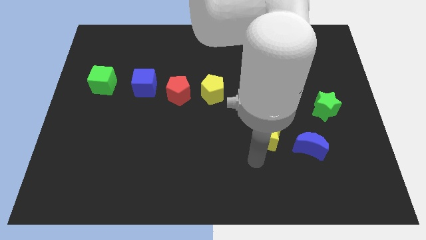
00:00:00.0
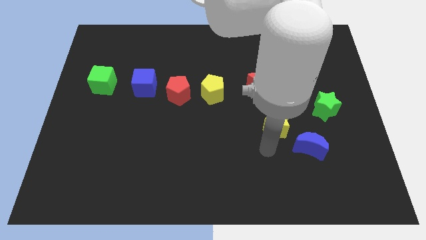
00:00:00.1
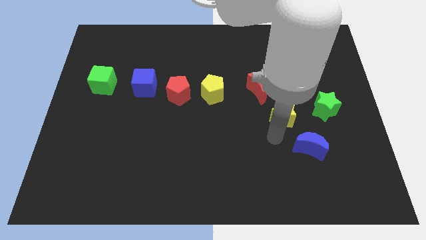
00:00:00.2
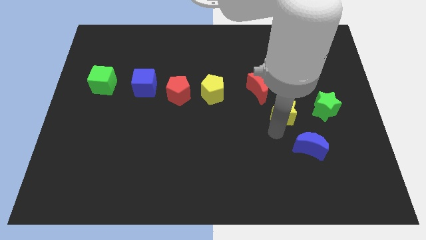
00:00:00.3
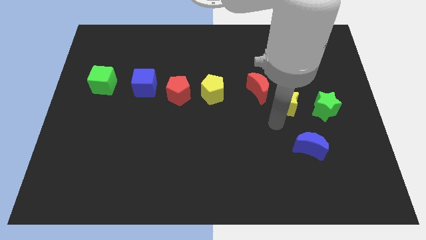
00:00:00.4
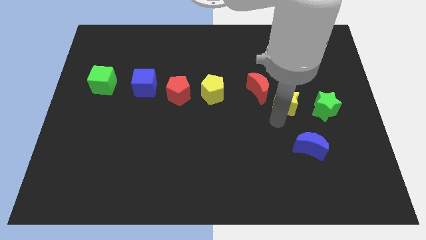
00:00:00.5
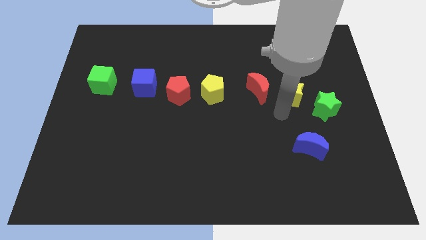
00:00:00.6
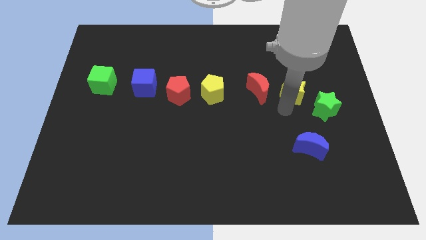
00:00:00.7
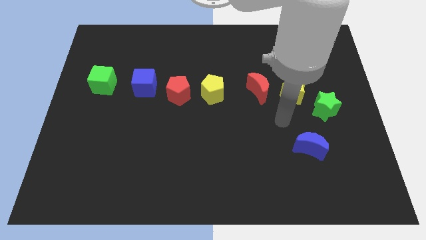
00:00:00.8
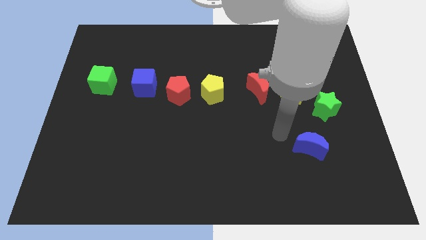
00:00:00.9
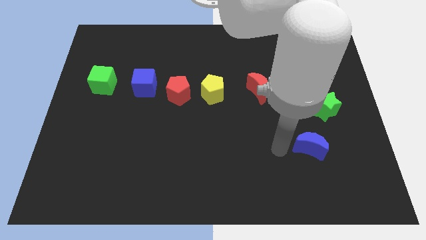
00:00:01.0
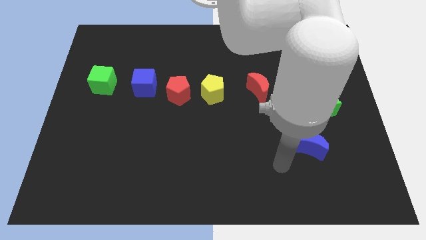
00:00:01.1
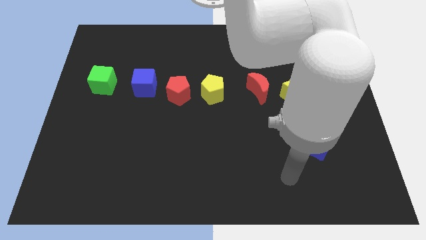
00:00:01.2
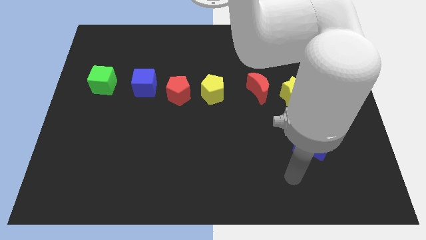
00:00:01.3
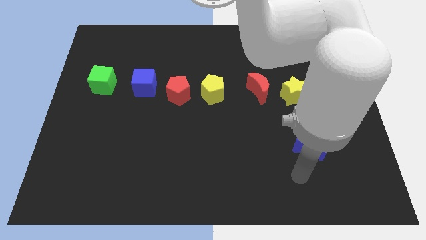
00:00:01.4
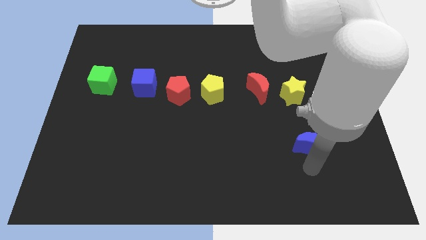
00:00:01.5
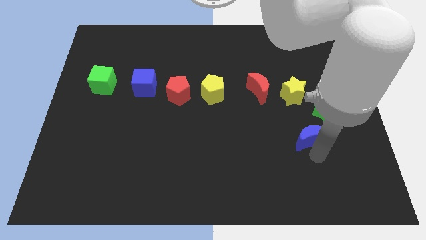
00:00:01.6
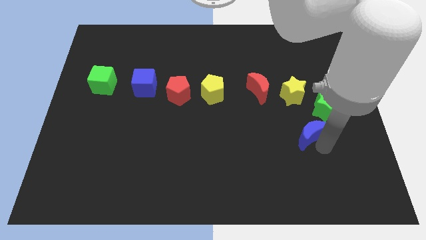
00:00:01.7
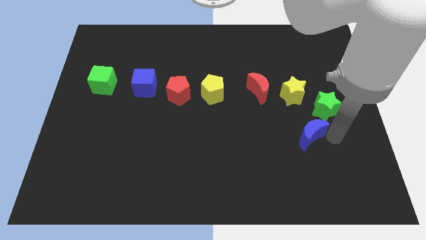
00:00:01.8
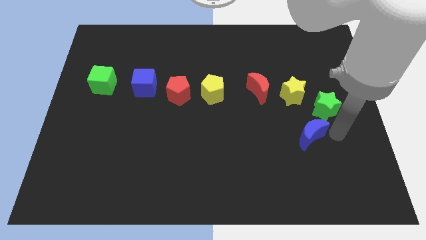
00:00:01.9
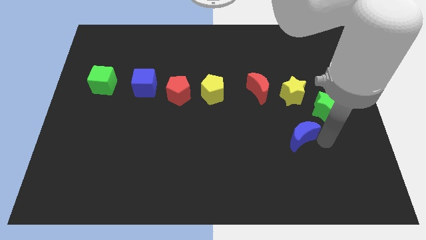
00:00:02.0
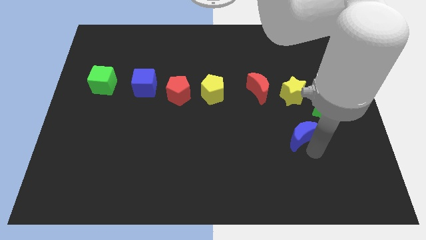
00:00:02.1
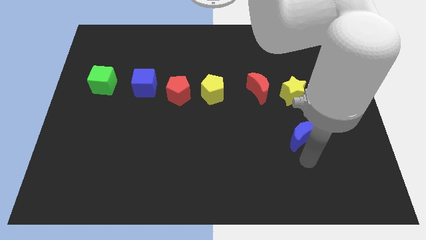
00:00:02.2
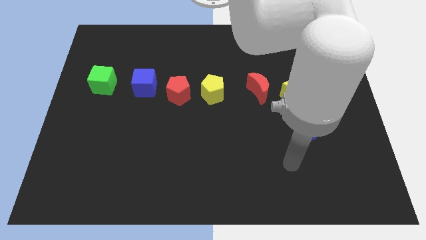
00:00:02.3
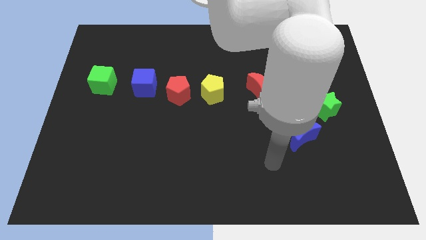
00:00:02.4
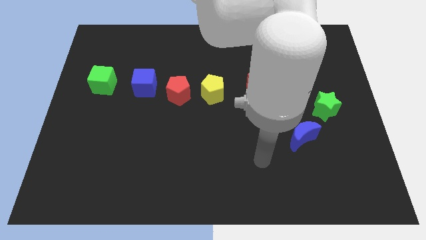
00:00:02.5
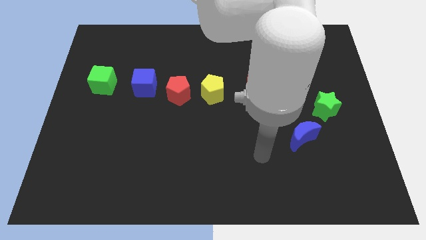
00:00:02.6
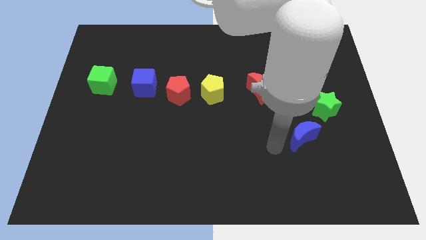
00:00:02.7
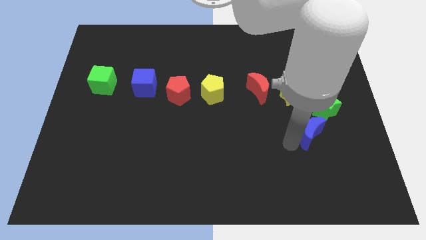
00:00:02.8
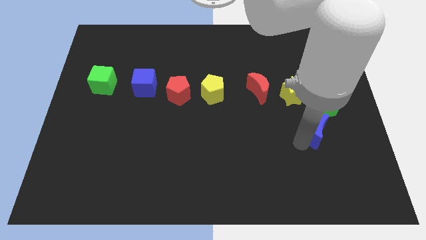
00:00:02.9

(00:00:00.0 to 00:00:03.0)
place the yellow star to the right of red crescent

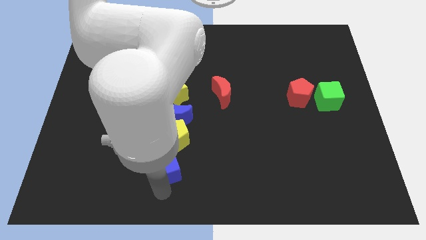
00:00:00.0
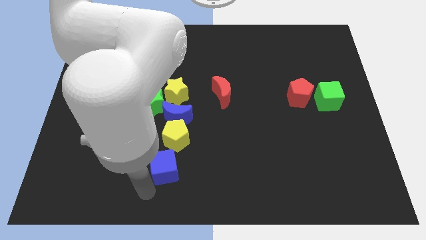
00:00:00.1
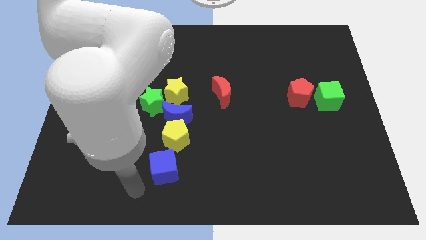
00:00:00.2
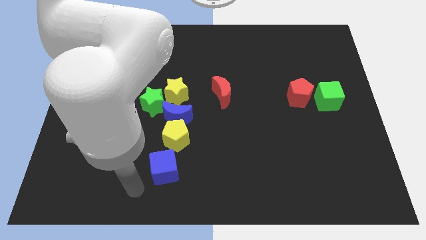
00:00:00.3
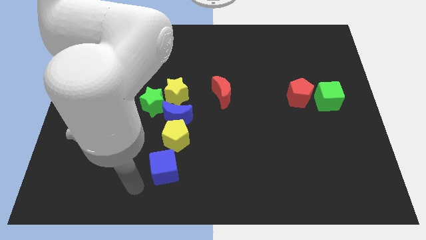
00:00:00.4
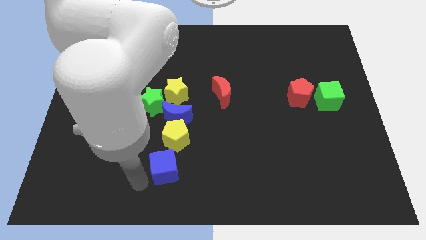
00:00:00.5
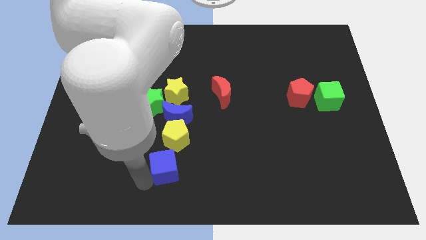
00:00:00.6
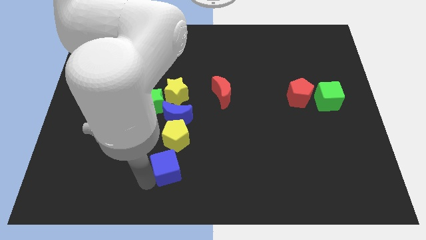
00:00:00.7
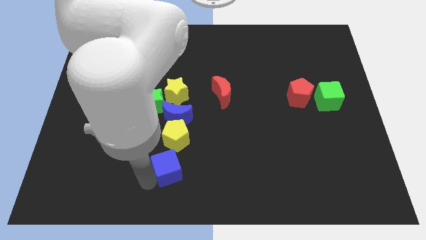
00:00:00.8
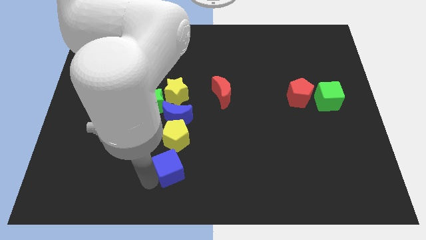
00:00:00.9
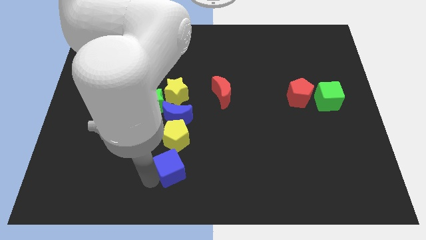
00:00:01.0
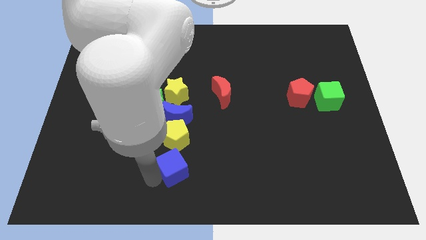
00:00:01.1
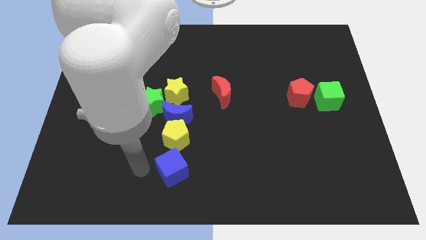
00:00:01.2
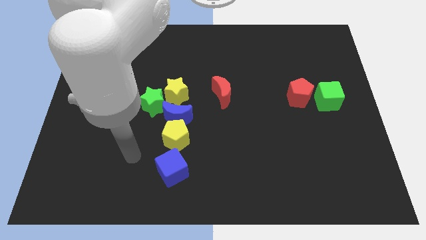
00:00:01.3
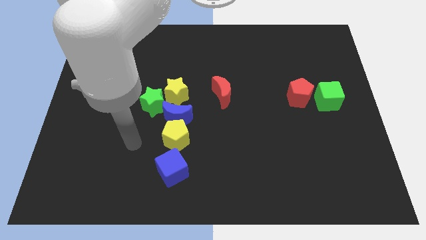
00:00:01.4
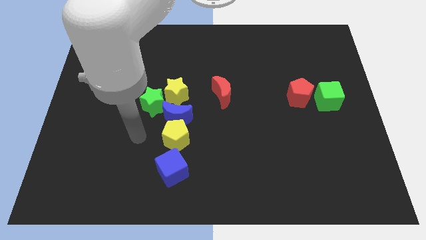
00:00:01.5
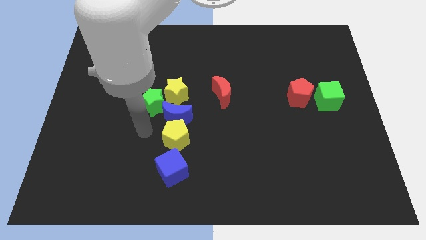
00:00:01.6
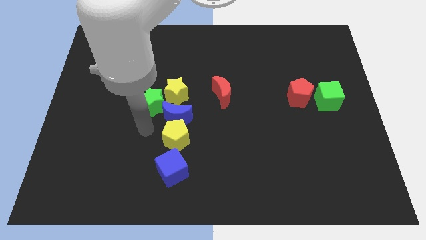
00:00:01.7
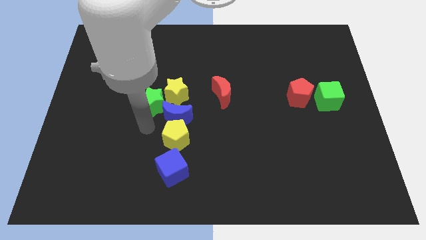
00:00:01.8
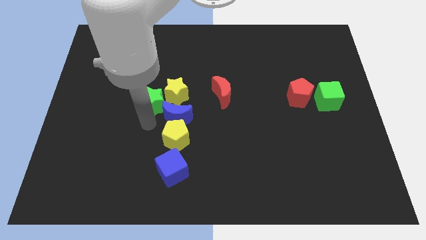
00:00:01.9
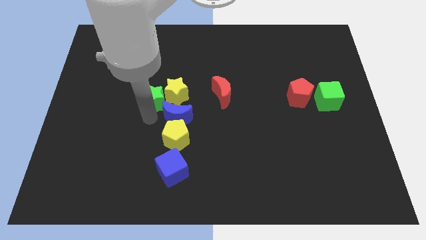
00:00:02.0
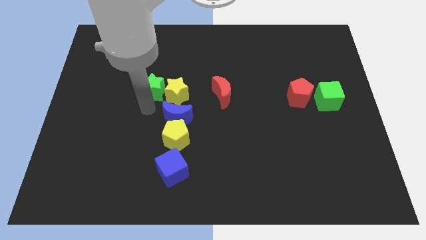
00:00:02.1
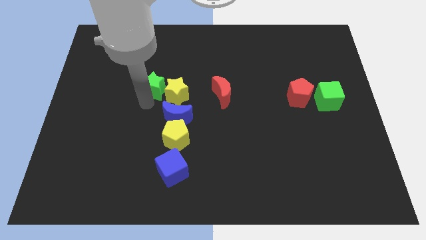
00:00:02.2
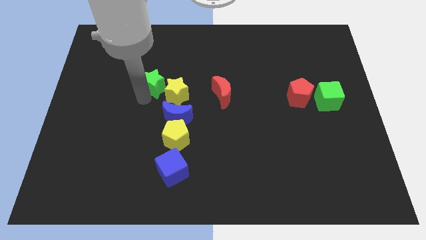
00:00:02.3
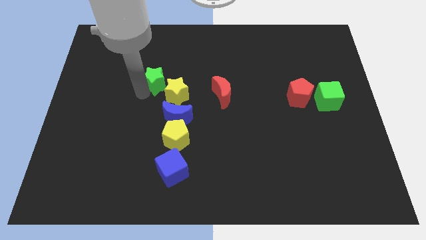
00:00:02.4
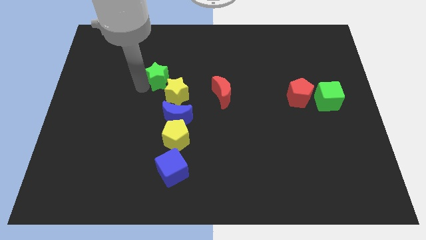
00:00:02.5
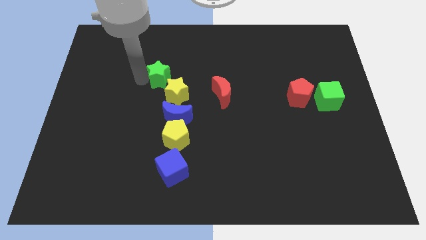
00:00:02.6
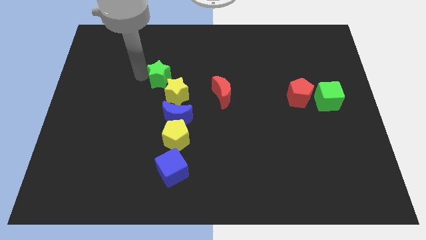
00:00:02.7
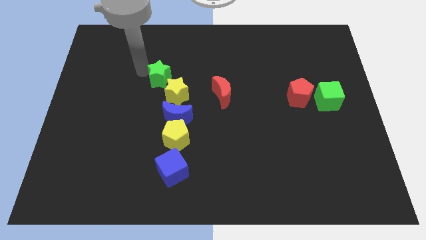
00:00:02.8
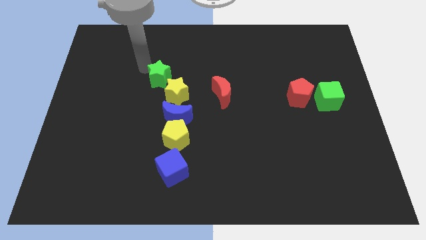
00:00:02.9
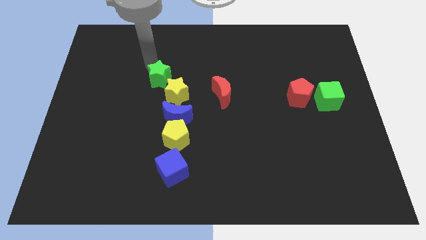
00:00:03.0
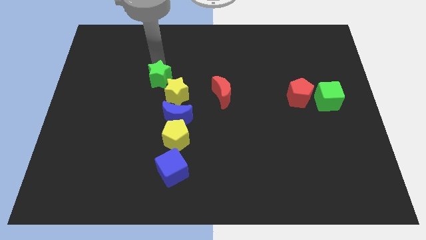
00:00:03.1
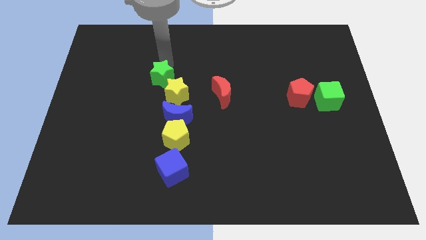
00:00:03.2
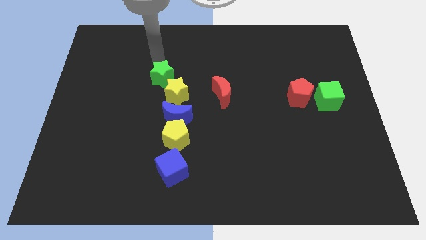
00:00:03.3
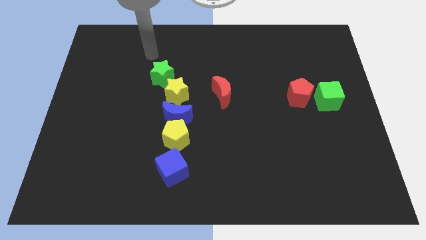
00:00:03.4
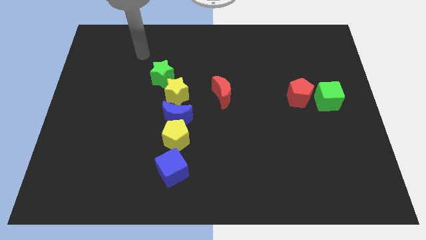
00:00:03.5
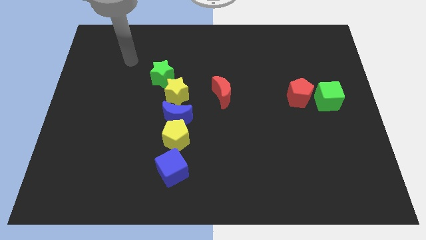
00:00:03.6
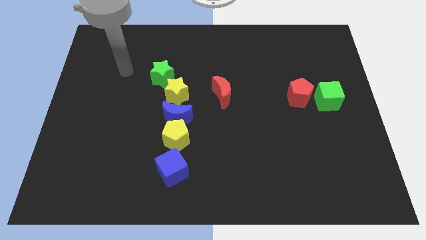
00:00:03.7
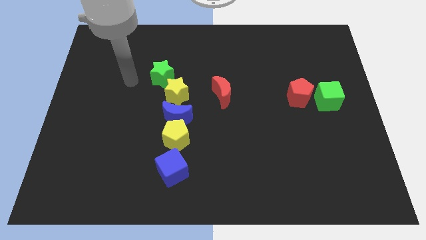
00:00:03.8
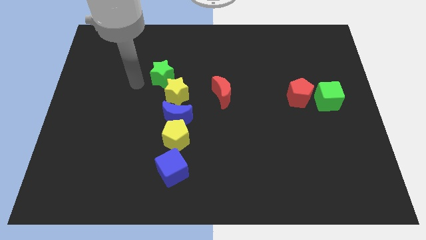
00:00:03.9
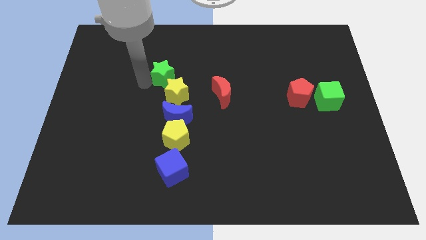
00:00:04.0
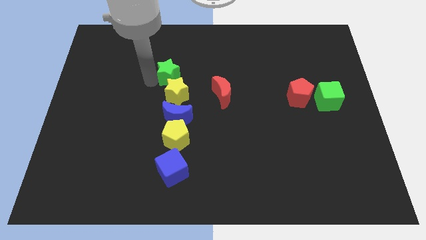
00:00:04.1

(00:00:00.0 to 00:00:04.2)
push the green star towards the top side of the board

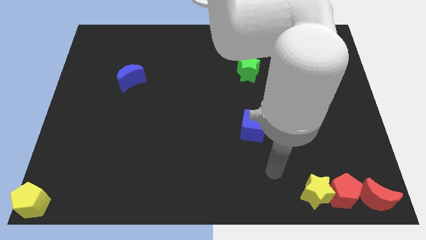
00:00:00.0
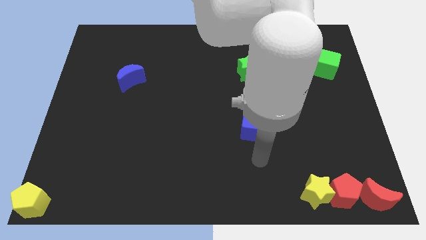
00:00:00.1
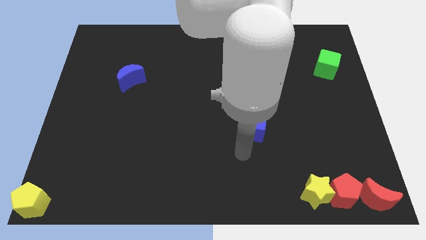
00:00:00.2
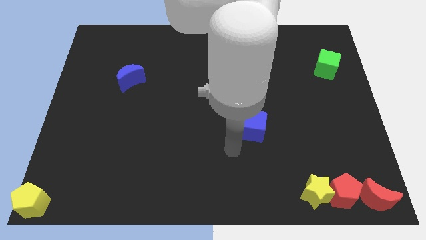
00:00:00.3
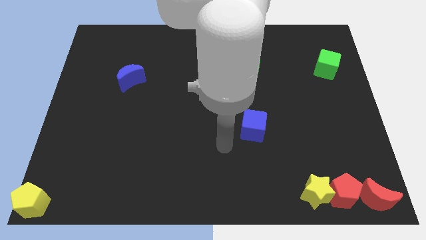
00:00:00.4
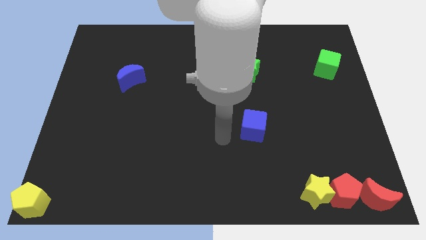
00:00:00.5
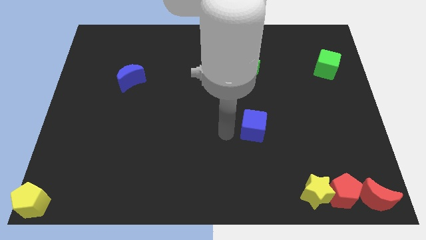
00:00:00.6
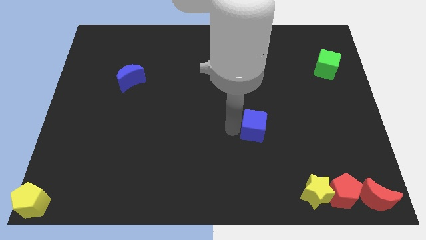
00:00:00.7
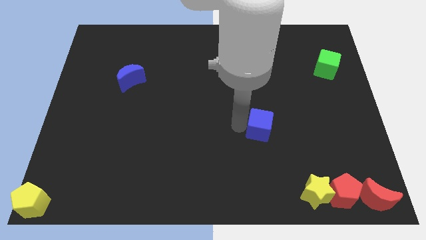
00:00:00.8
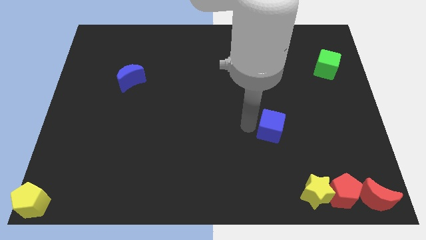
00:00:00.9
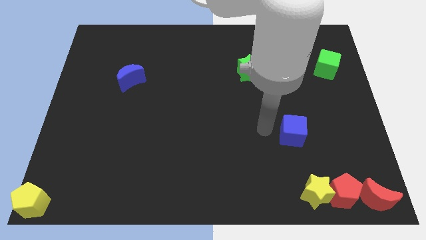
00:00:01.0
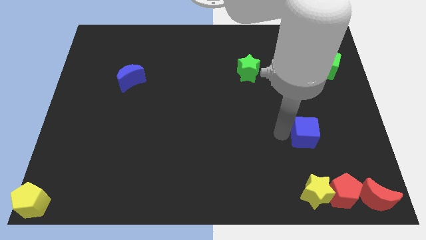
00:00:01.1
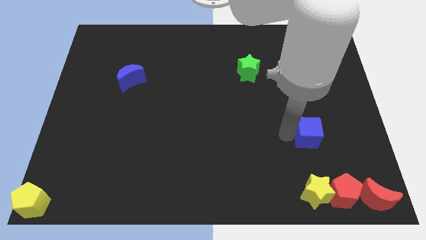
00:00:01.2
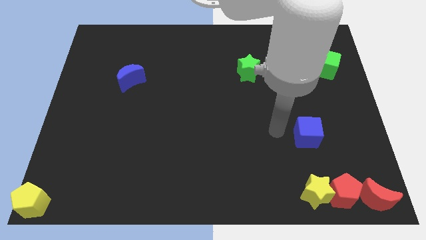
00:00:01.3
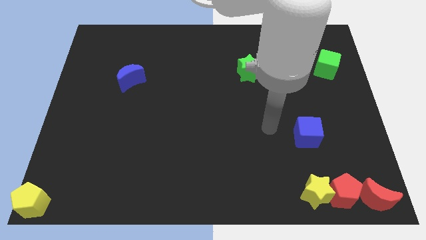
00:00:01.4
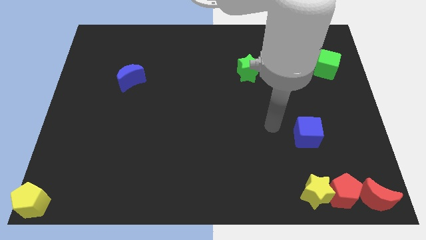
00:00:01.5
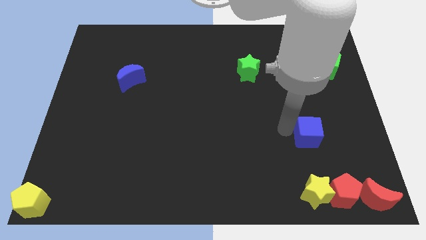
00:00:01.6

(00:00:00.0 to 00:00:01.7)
move the blue cube parallel to the yellow star

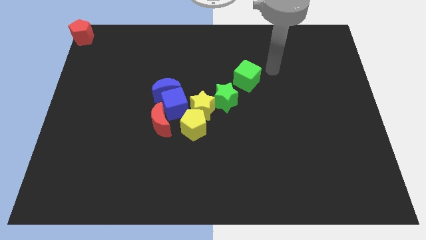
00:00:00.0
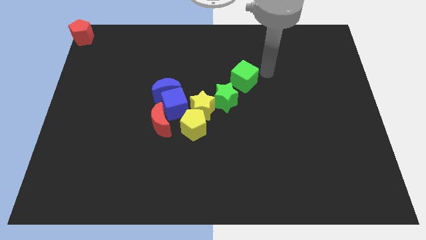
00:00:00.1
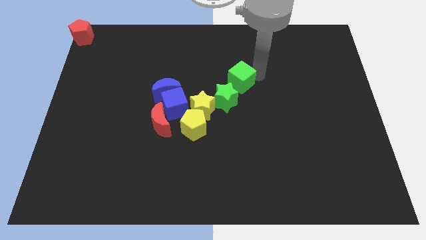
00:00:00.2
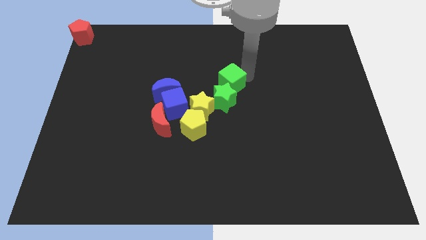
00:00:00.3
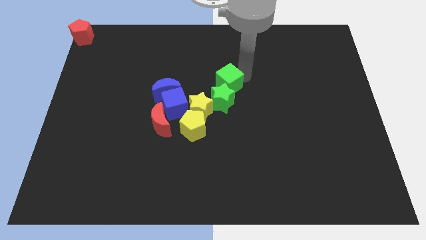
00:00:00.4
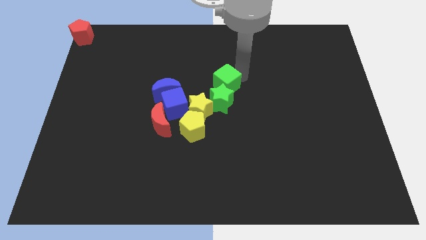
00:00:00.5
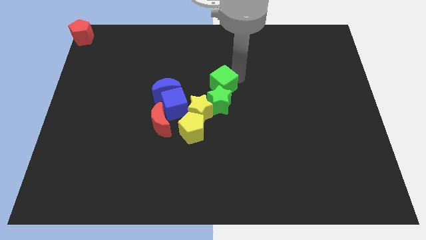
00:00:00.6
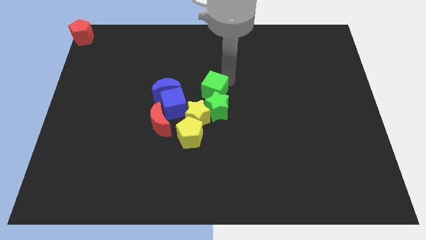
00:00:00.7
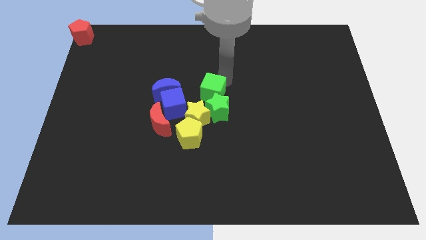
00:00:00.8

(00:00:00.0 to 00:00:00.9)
push the green cube slightly into the green star
